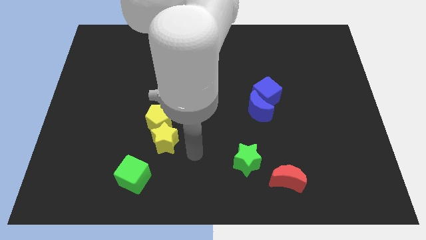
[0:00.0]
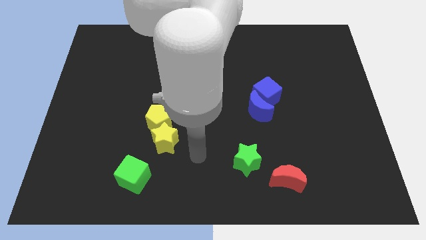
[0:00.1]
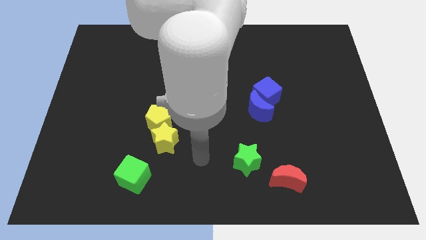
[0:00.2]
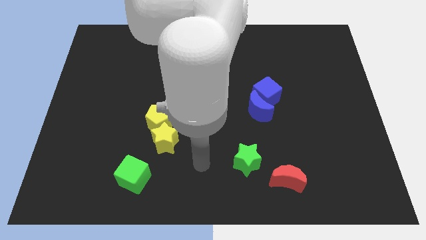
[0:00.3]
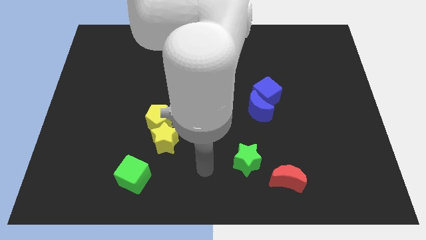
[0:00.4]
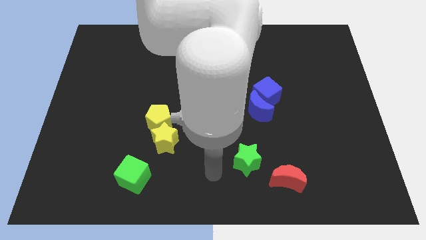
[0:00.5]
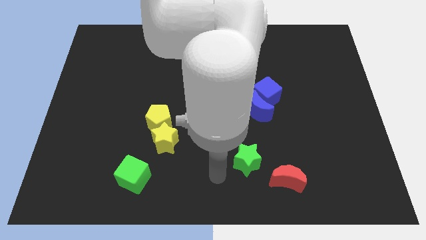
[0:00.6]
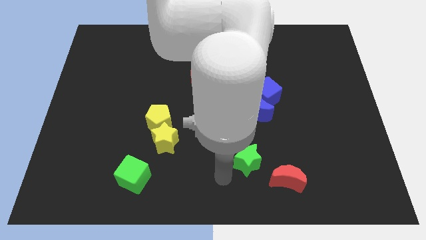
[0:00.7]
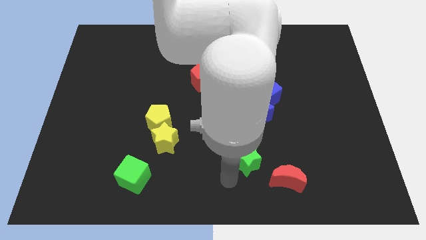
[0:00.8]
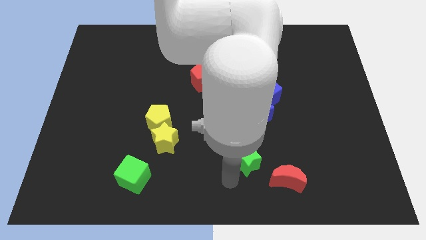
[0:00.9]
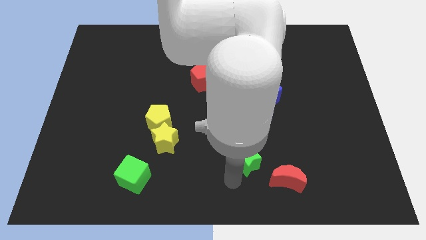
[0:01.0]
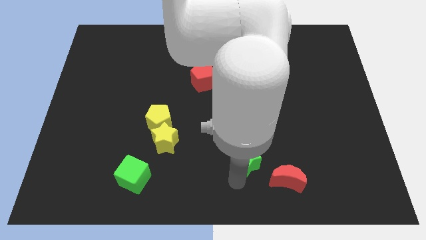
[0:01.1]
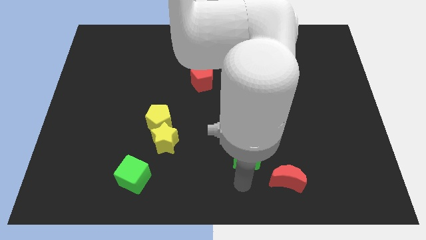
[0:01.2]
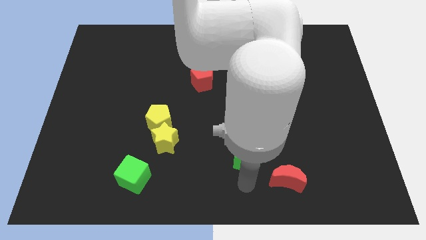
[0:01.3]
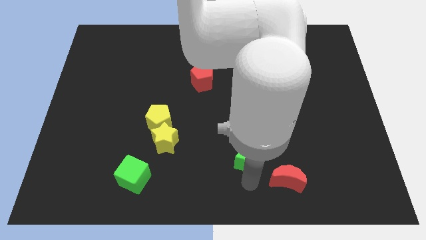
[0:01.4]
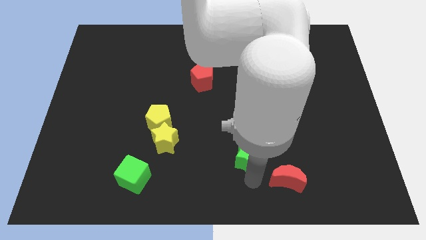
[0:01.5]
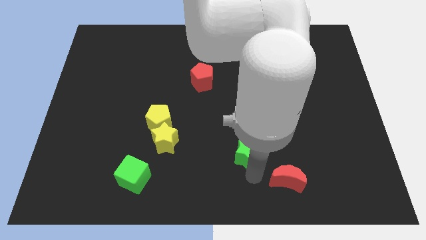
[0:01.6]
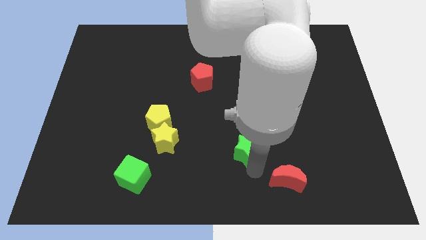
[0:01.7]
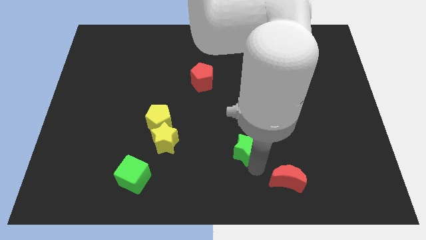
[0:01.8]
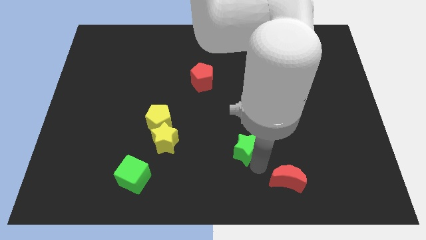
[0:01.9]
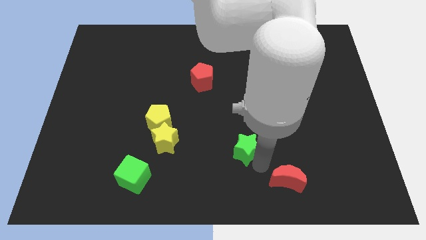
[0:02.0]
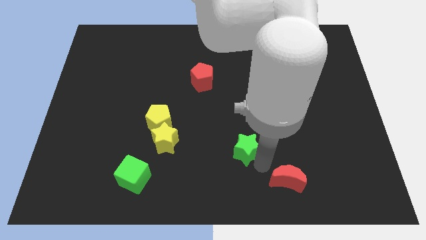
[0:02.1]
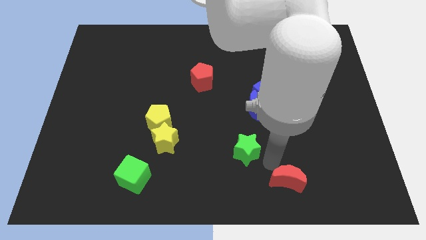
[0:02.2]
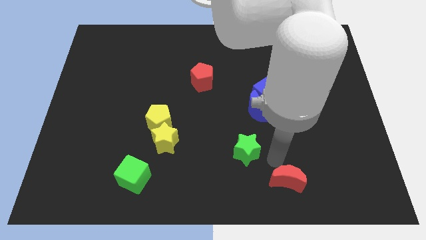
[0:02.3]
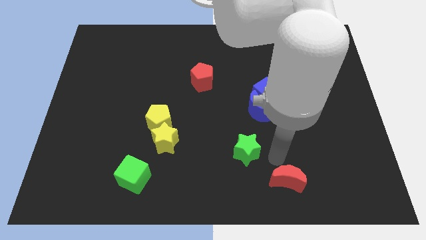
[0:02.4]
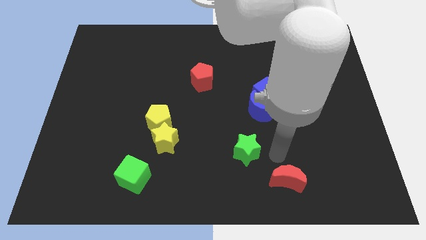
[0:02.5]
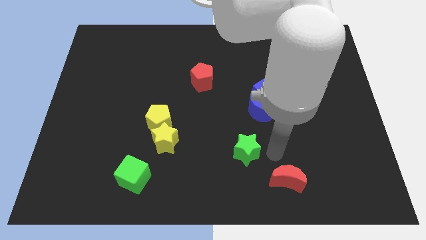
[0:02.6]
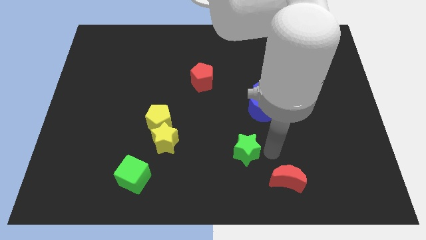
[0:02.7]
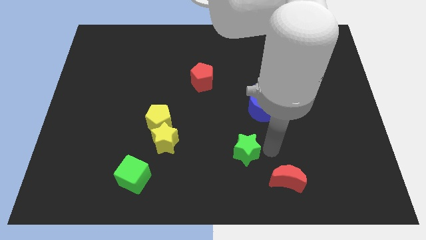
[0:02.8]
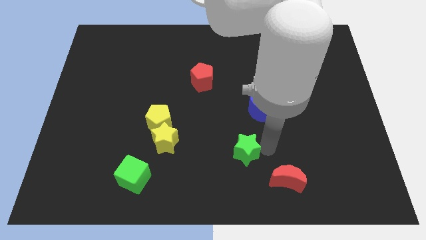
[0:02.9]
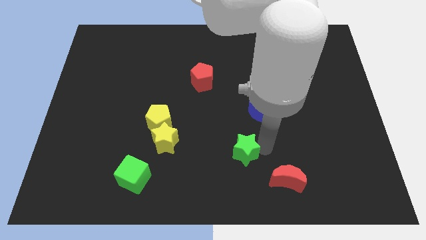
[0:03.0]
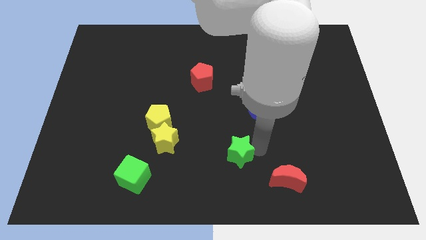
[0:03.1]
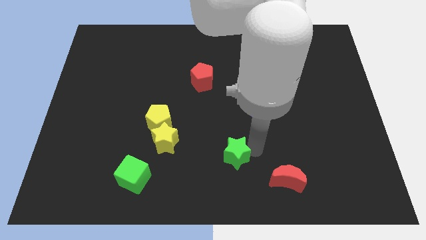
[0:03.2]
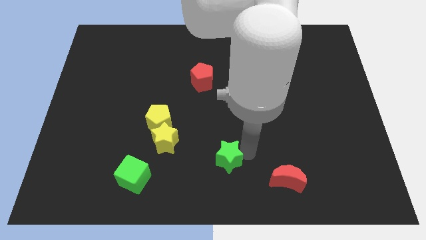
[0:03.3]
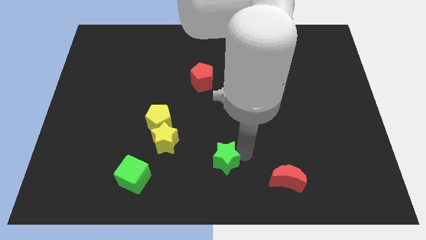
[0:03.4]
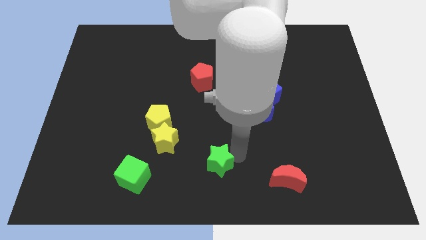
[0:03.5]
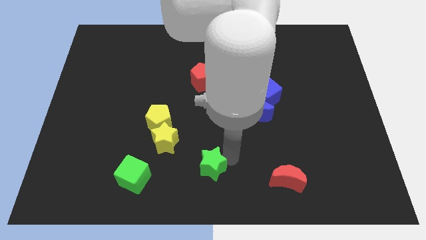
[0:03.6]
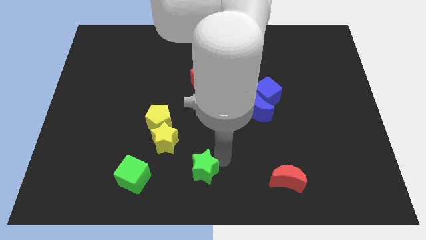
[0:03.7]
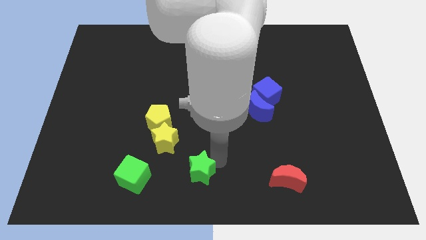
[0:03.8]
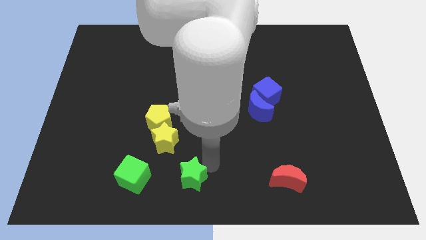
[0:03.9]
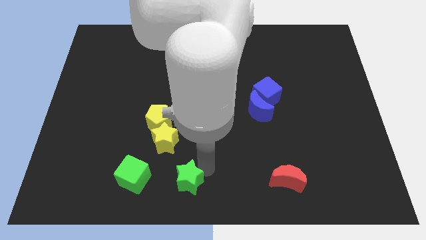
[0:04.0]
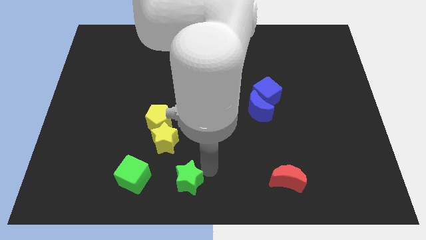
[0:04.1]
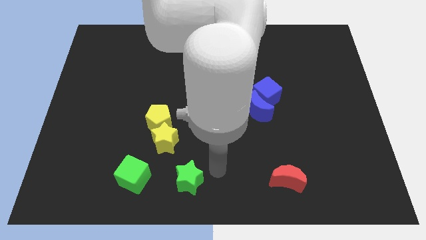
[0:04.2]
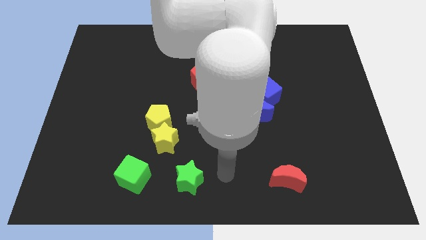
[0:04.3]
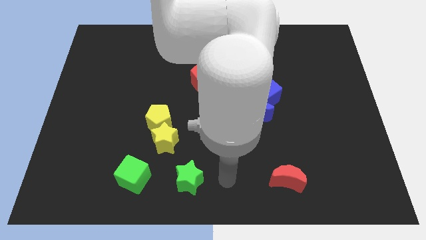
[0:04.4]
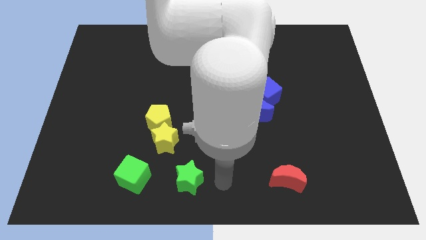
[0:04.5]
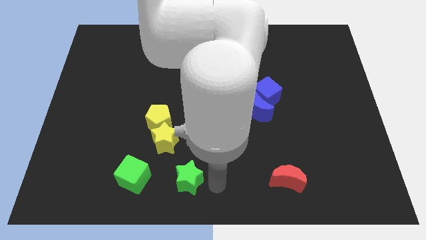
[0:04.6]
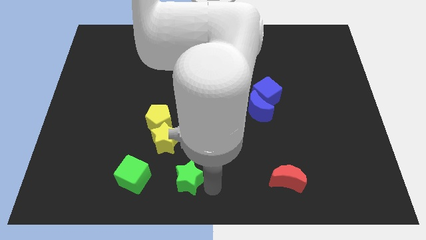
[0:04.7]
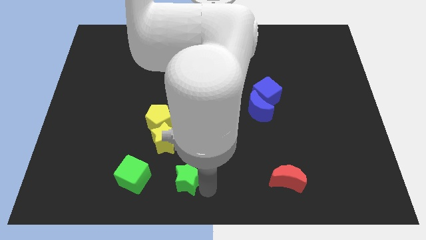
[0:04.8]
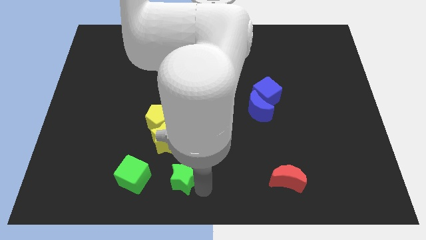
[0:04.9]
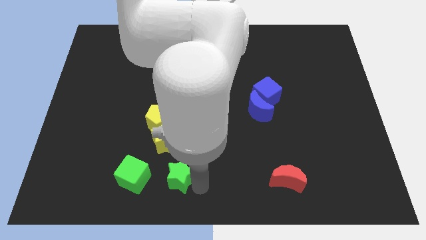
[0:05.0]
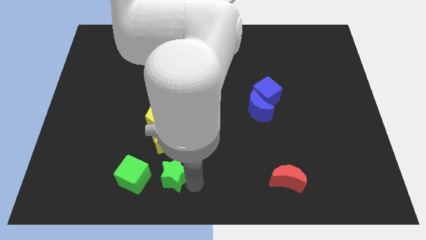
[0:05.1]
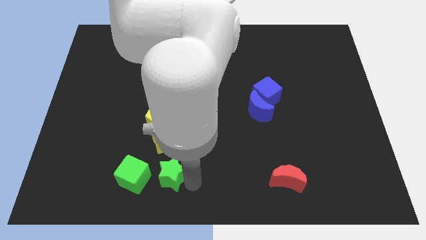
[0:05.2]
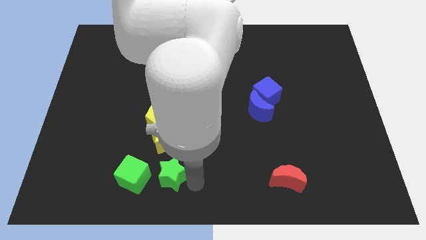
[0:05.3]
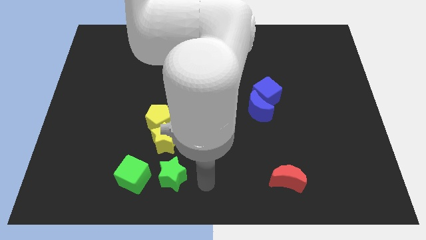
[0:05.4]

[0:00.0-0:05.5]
push the green star closer to the green cube

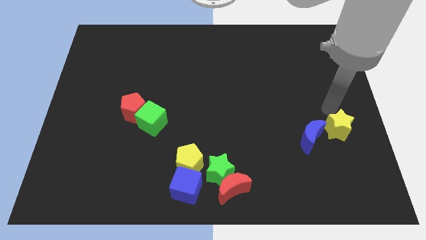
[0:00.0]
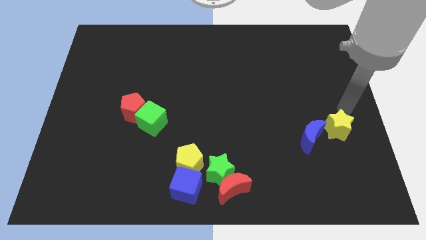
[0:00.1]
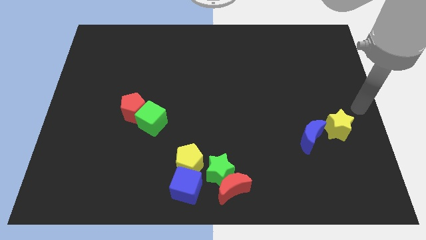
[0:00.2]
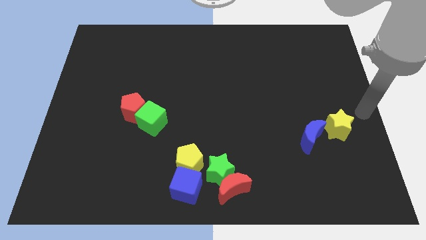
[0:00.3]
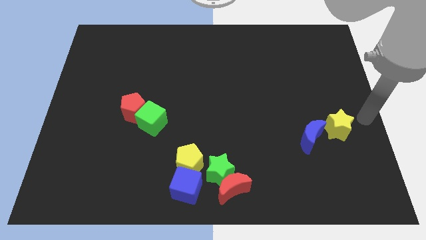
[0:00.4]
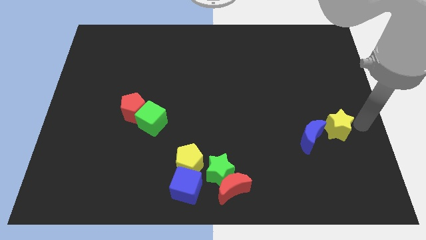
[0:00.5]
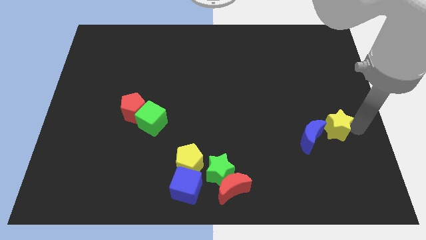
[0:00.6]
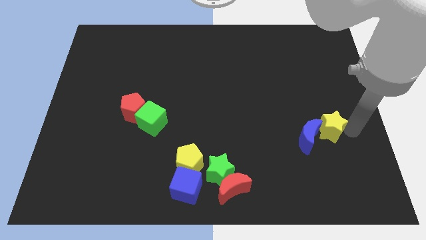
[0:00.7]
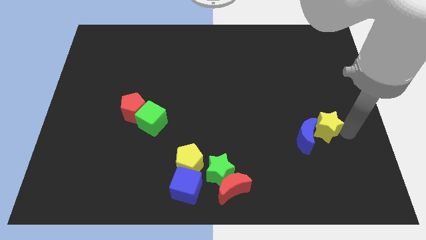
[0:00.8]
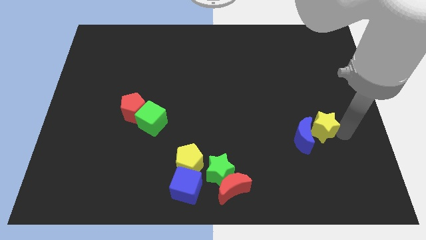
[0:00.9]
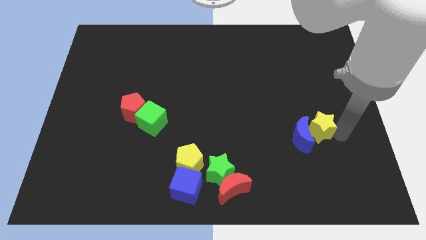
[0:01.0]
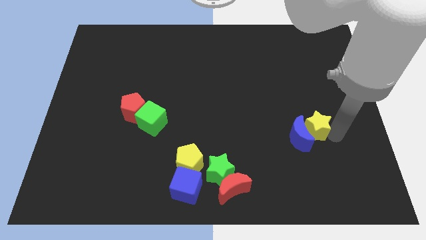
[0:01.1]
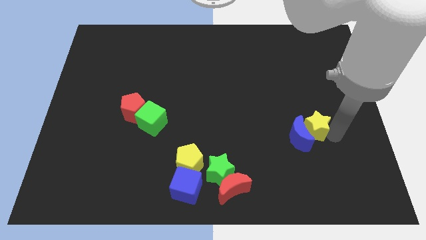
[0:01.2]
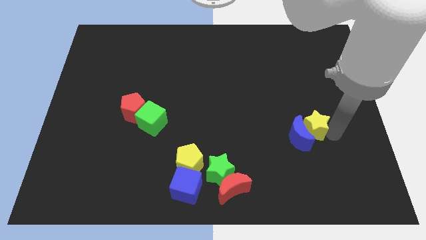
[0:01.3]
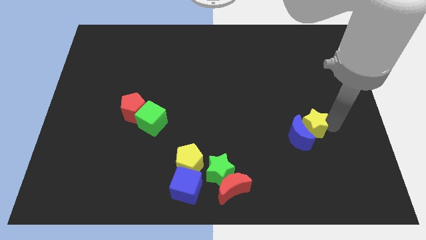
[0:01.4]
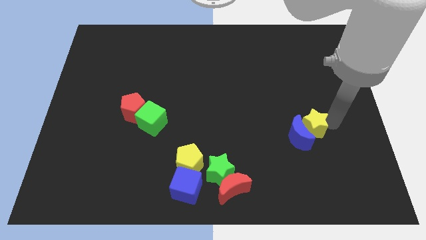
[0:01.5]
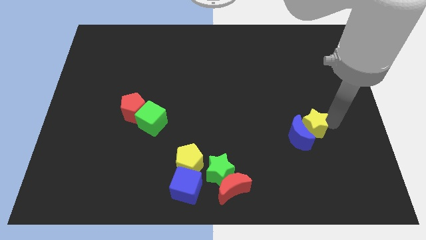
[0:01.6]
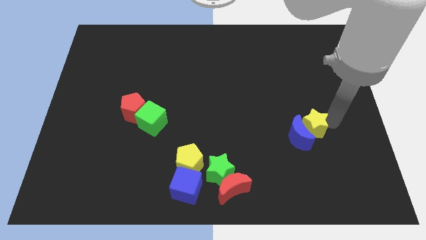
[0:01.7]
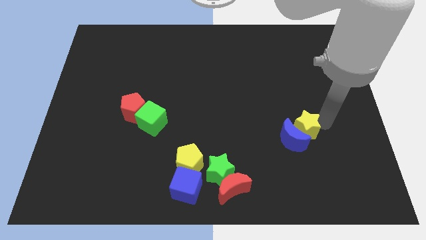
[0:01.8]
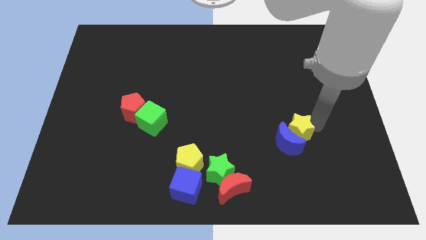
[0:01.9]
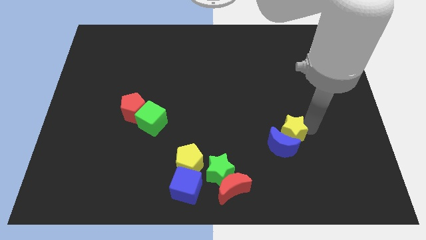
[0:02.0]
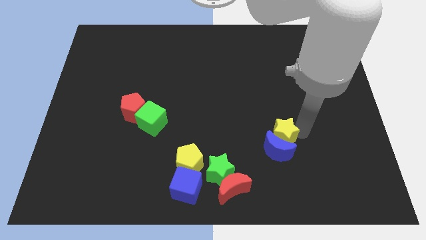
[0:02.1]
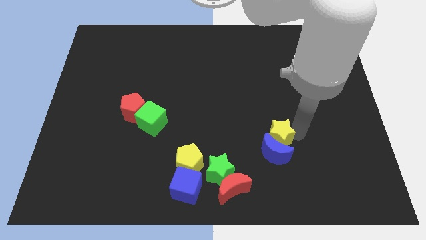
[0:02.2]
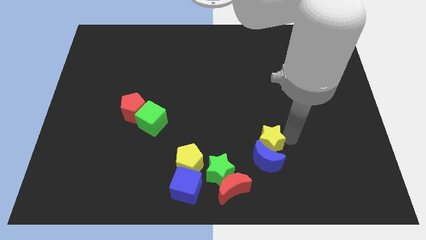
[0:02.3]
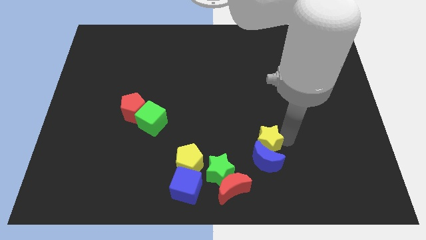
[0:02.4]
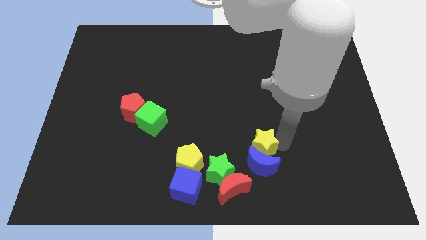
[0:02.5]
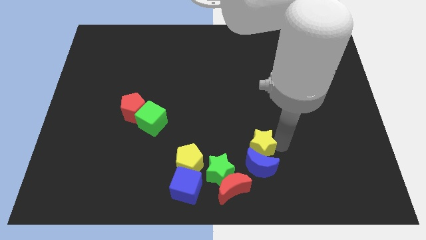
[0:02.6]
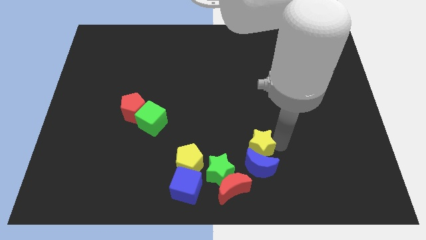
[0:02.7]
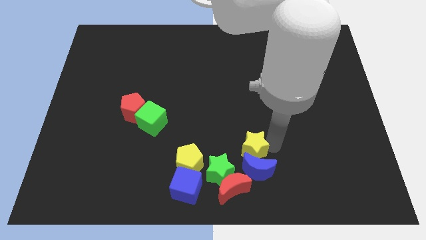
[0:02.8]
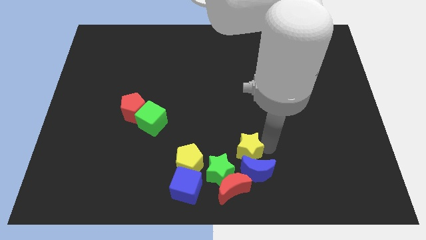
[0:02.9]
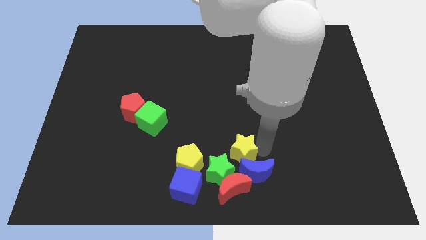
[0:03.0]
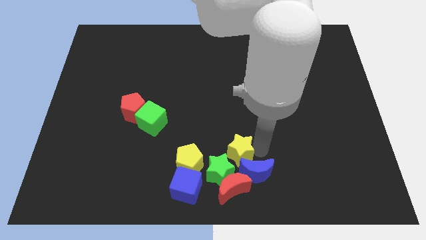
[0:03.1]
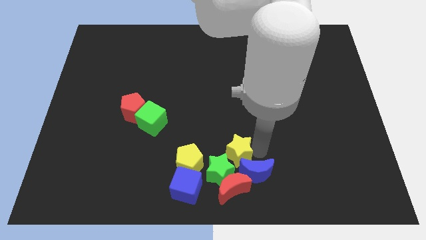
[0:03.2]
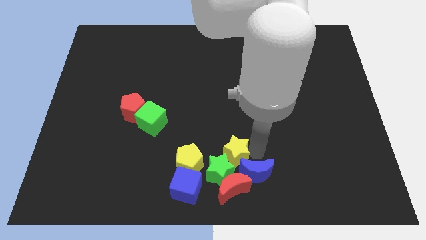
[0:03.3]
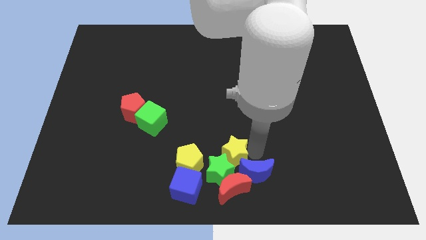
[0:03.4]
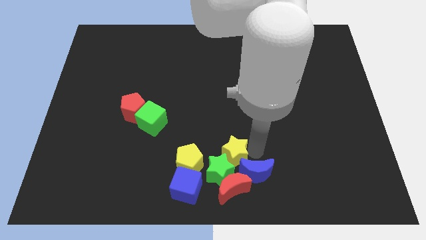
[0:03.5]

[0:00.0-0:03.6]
move the blue crescent along with the yellow star to the bottom center of the board
